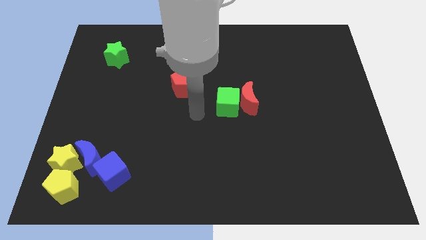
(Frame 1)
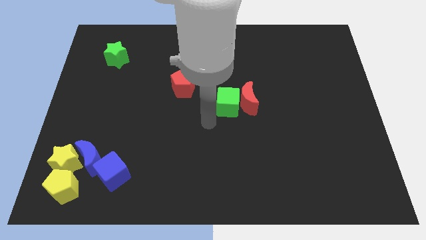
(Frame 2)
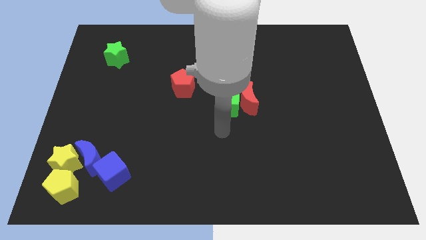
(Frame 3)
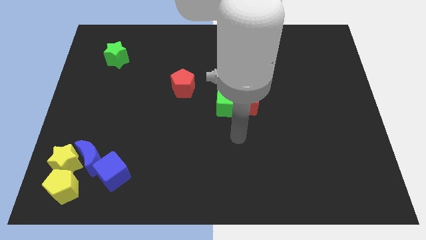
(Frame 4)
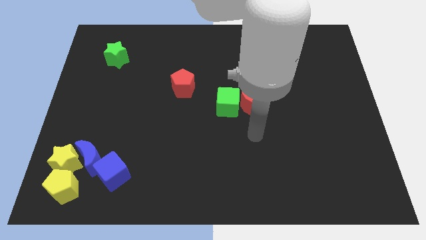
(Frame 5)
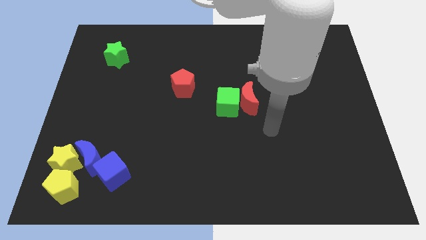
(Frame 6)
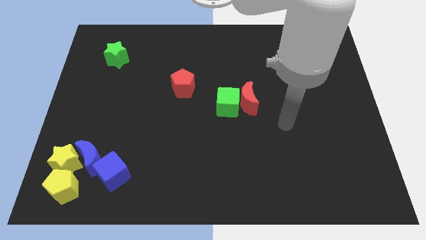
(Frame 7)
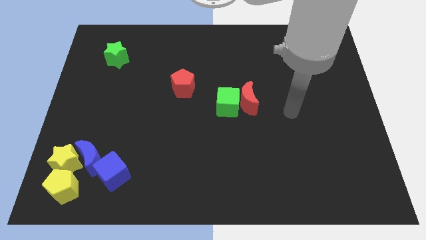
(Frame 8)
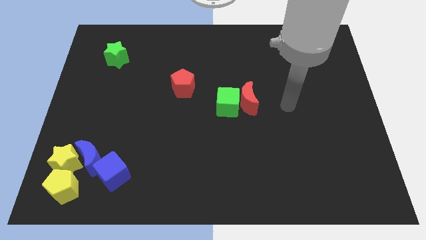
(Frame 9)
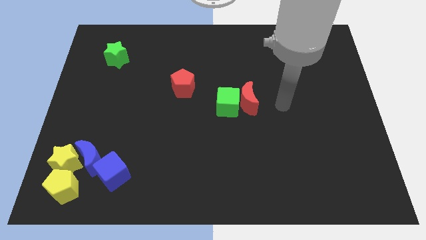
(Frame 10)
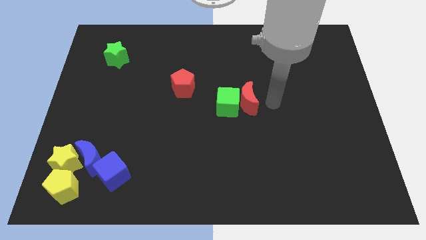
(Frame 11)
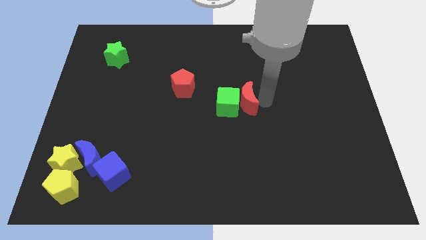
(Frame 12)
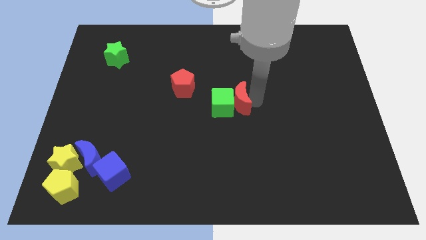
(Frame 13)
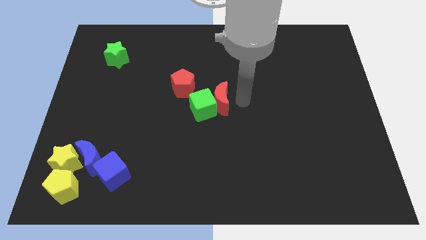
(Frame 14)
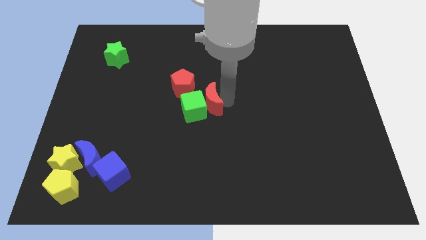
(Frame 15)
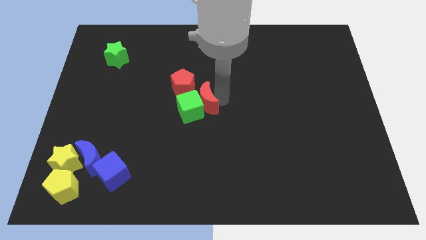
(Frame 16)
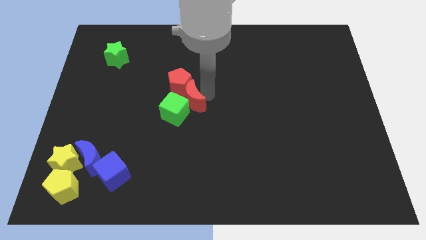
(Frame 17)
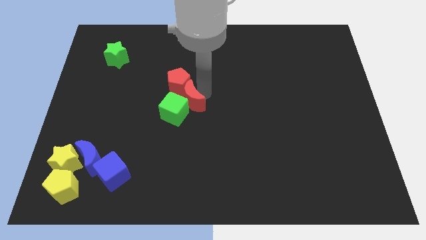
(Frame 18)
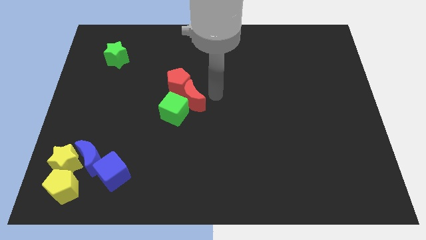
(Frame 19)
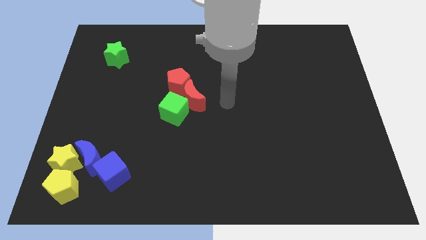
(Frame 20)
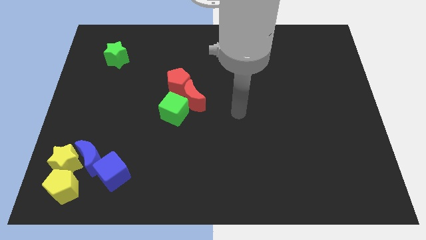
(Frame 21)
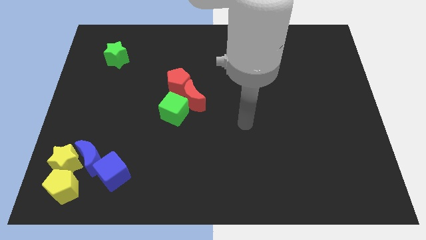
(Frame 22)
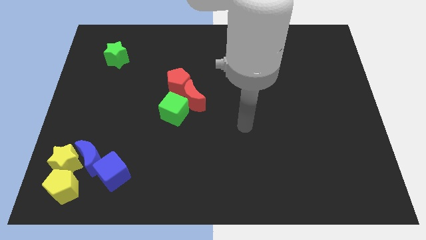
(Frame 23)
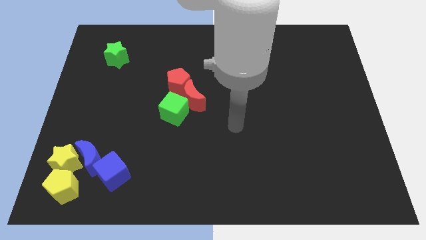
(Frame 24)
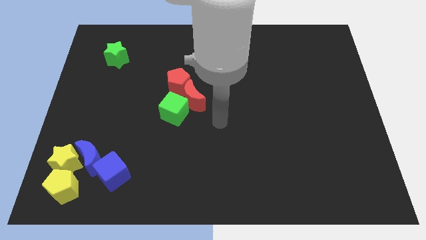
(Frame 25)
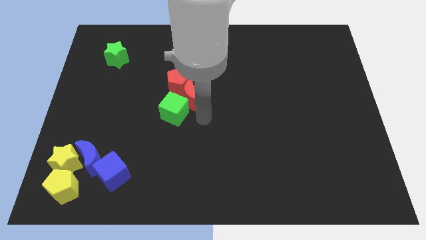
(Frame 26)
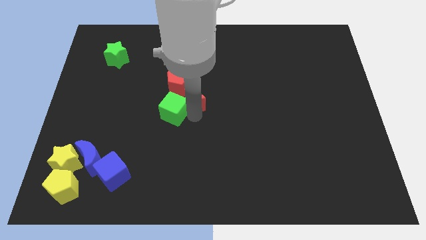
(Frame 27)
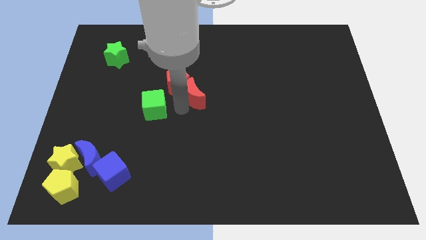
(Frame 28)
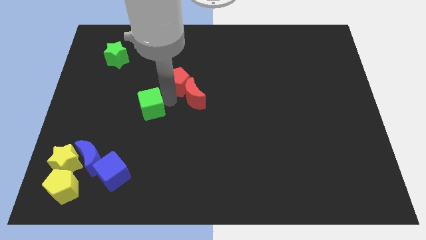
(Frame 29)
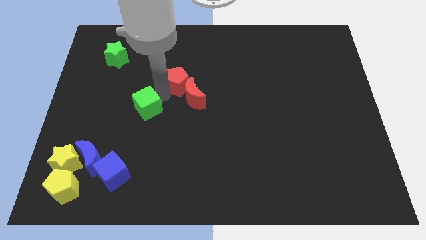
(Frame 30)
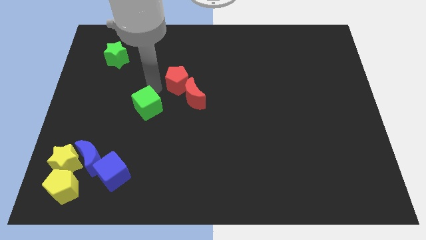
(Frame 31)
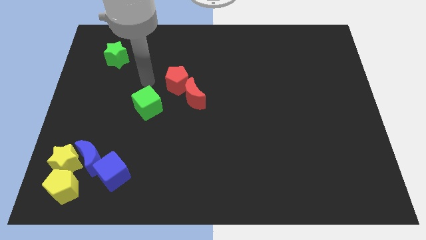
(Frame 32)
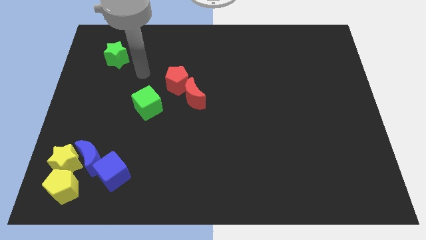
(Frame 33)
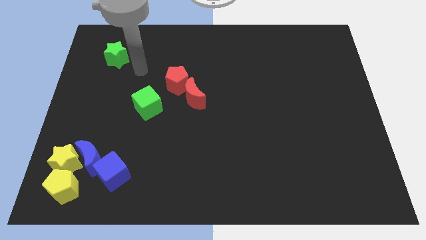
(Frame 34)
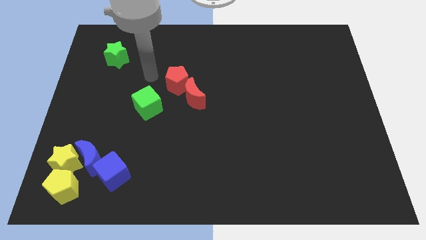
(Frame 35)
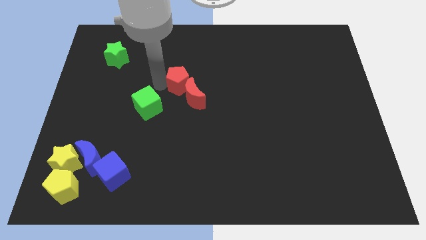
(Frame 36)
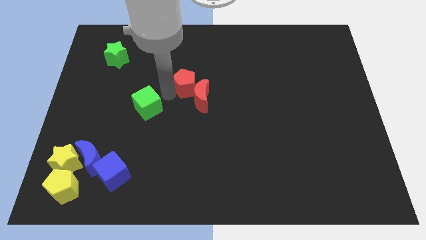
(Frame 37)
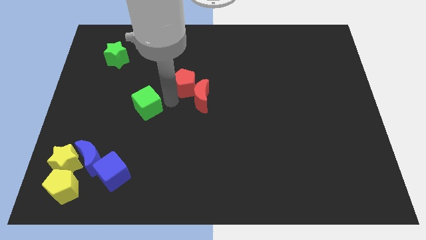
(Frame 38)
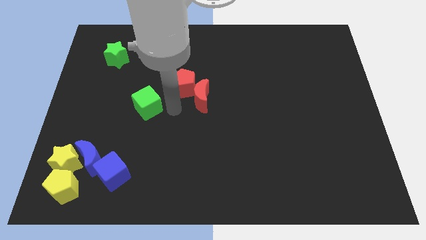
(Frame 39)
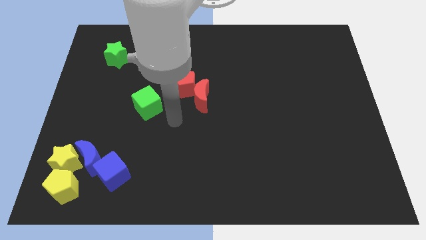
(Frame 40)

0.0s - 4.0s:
push the red moon into the red pentagon

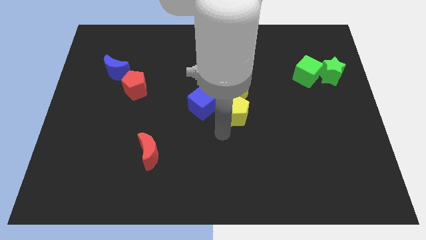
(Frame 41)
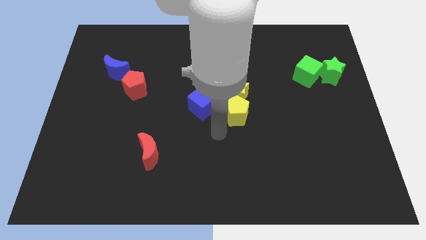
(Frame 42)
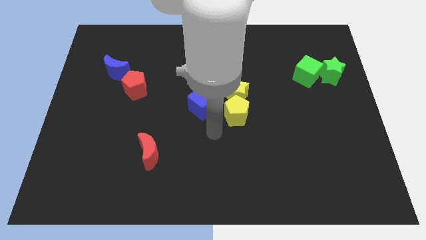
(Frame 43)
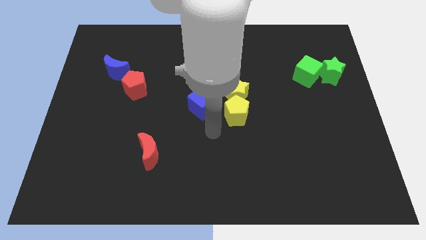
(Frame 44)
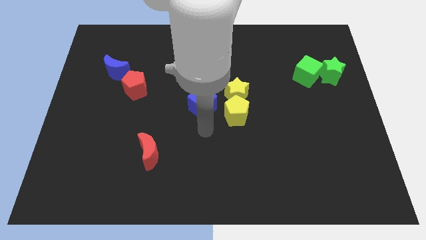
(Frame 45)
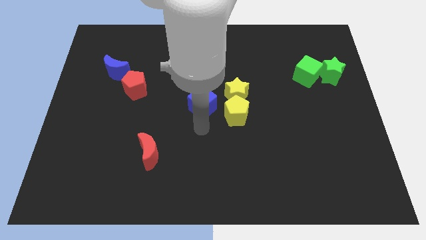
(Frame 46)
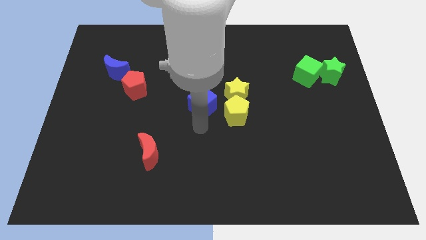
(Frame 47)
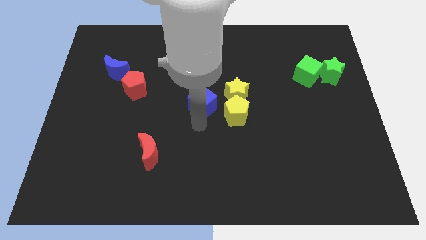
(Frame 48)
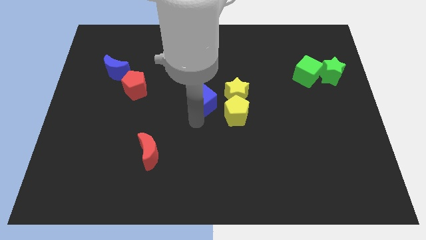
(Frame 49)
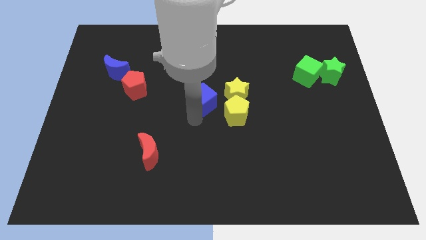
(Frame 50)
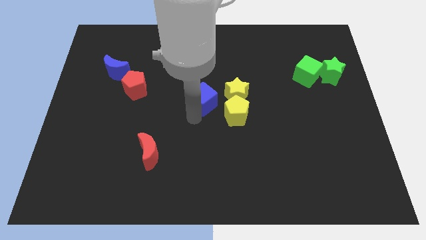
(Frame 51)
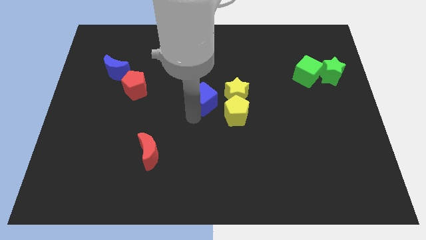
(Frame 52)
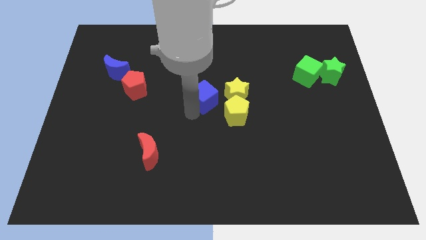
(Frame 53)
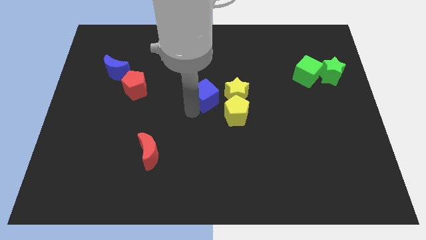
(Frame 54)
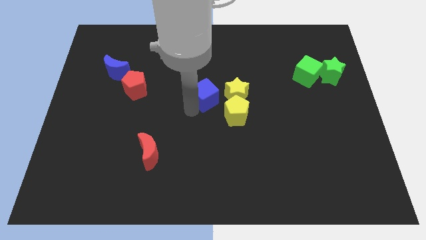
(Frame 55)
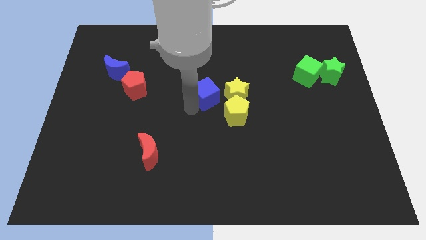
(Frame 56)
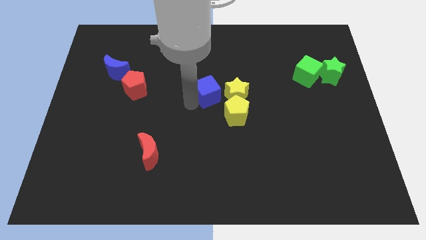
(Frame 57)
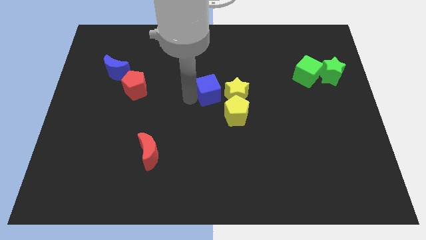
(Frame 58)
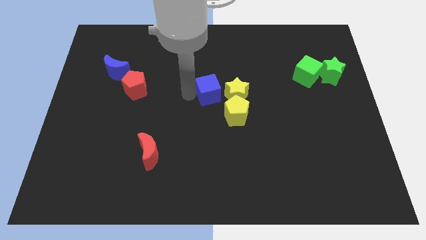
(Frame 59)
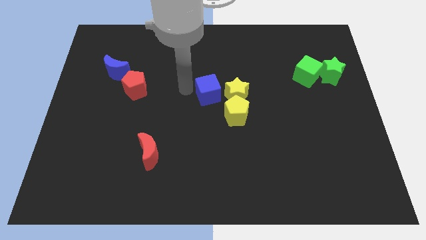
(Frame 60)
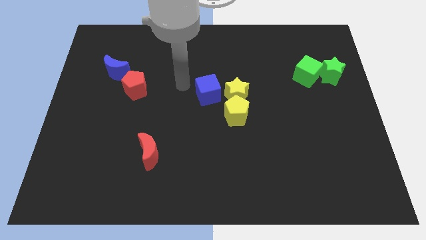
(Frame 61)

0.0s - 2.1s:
push the blue cube to the left of the yellow star

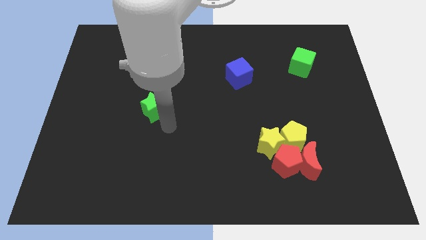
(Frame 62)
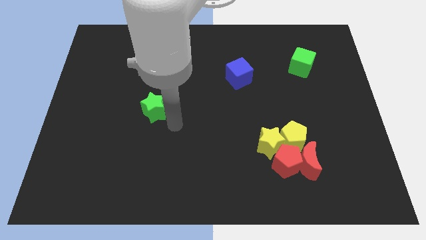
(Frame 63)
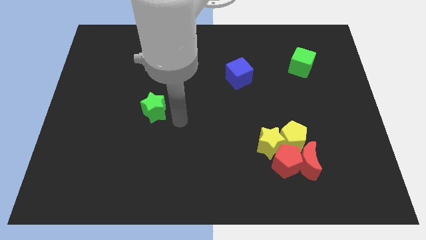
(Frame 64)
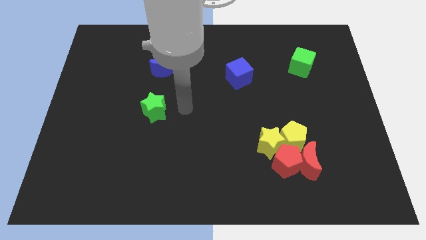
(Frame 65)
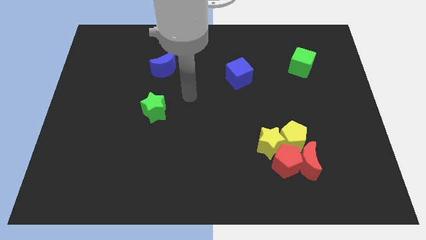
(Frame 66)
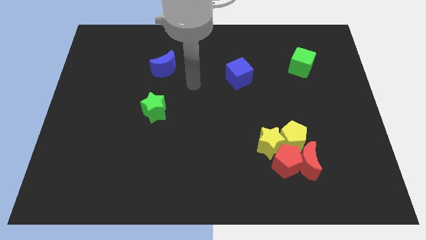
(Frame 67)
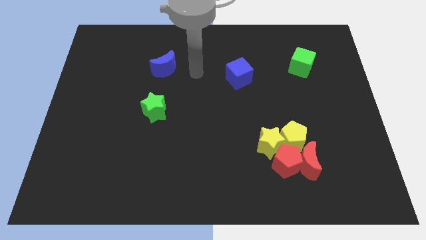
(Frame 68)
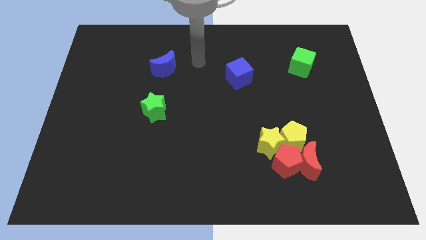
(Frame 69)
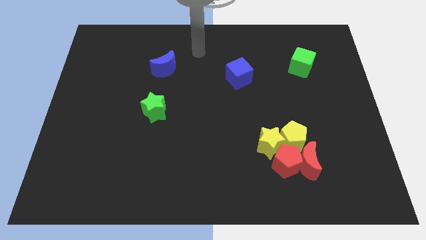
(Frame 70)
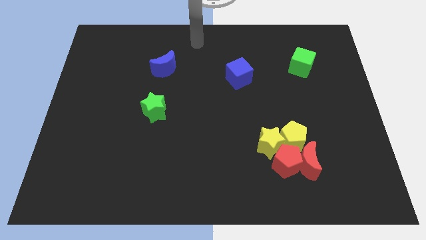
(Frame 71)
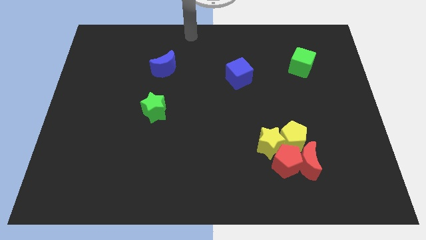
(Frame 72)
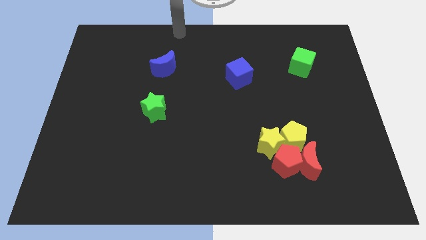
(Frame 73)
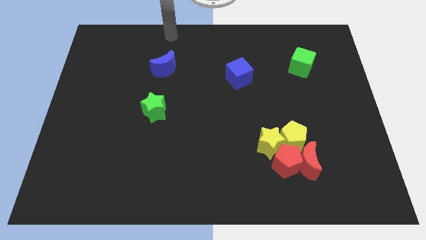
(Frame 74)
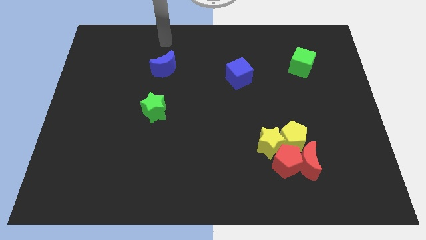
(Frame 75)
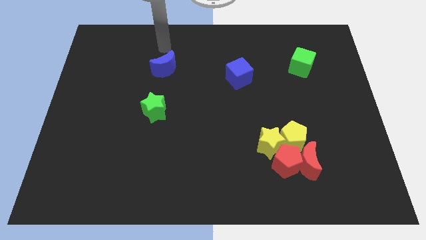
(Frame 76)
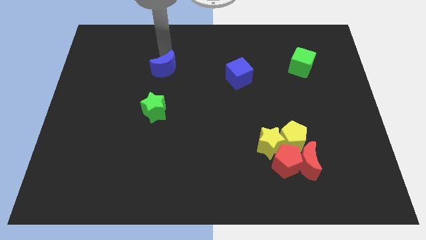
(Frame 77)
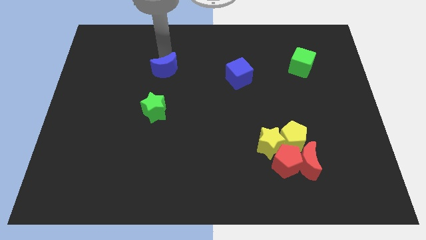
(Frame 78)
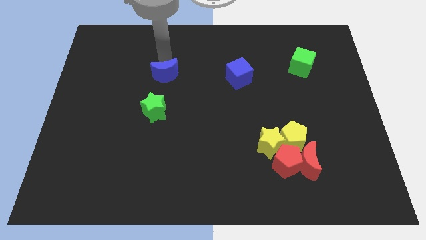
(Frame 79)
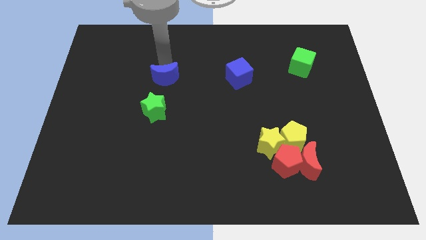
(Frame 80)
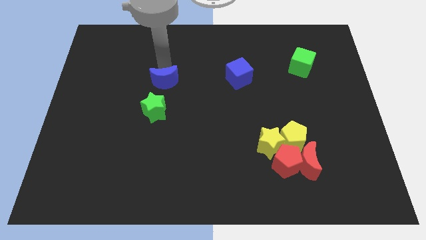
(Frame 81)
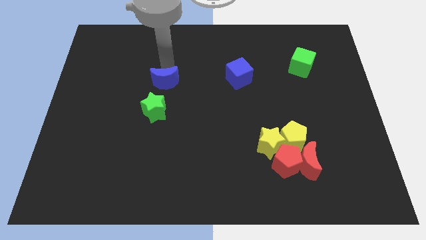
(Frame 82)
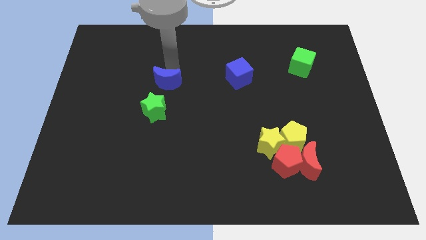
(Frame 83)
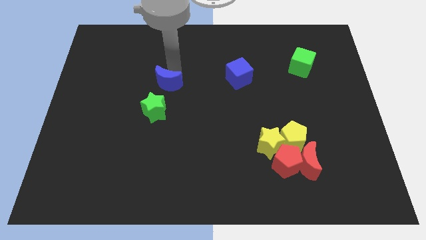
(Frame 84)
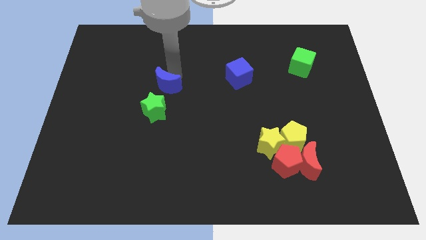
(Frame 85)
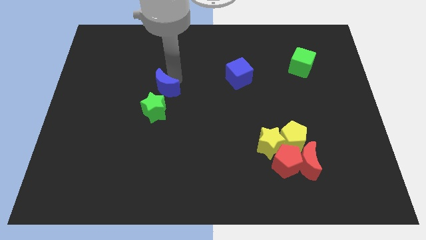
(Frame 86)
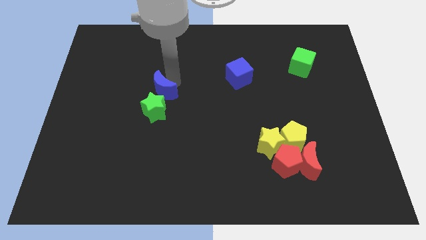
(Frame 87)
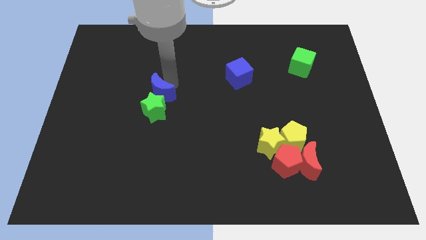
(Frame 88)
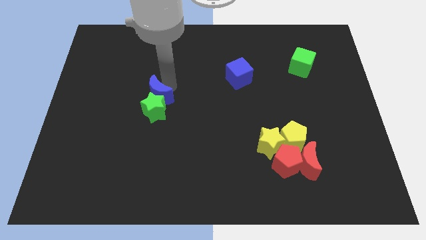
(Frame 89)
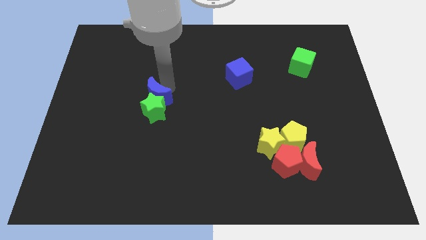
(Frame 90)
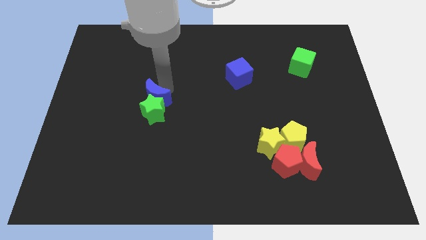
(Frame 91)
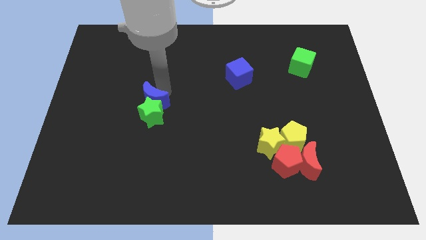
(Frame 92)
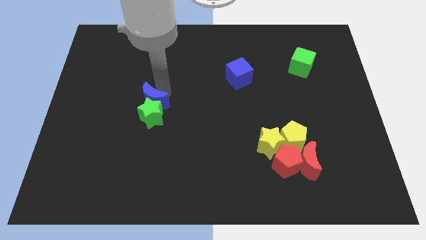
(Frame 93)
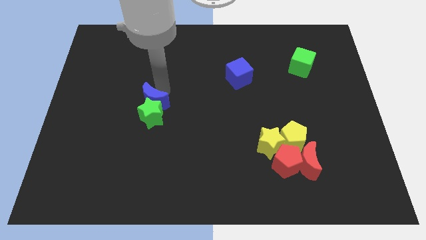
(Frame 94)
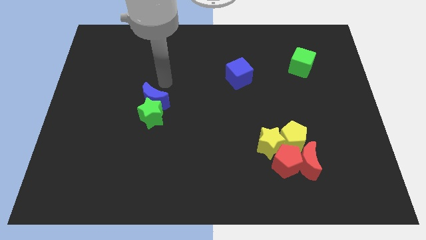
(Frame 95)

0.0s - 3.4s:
push the blue crescent into the green star
